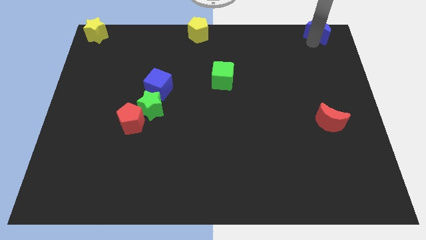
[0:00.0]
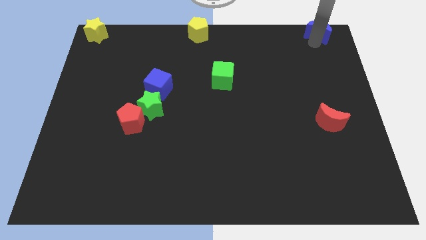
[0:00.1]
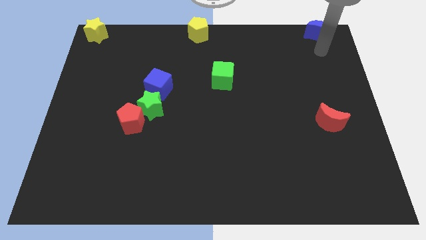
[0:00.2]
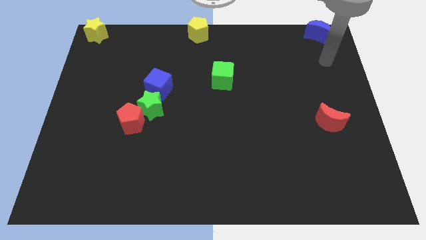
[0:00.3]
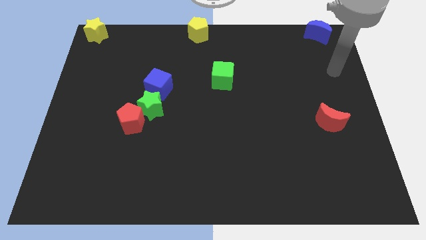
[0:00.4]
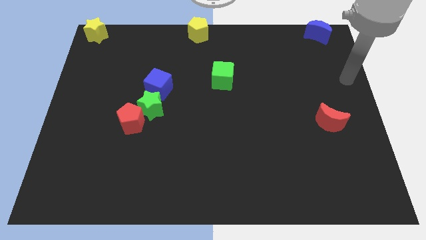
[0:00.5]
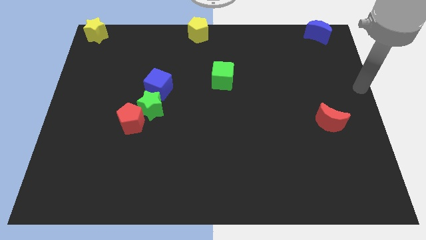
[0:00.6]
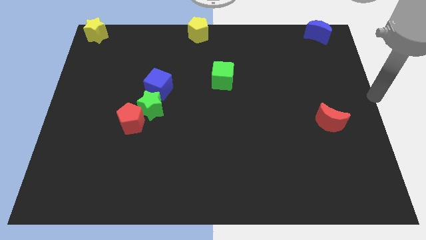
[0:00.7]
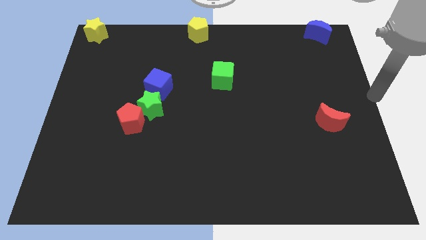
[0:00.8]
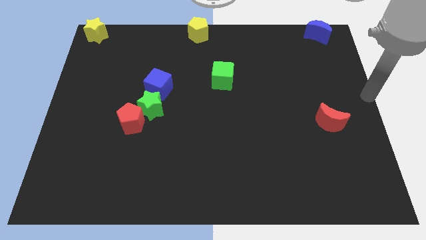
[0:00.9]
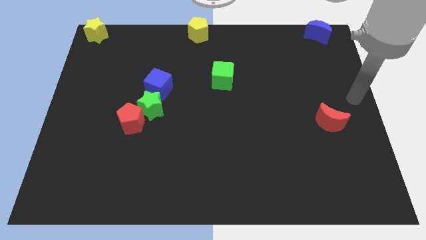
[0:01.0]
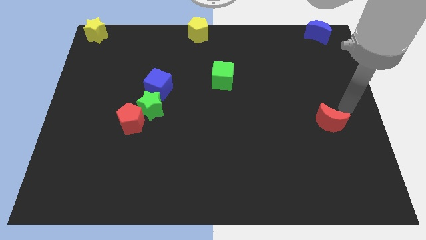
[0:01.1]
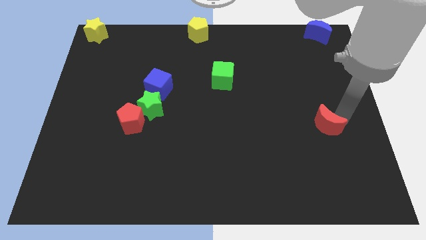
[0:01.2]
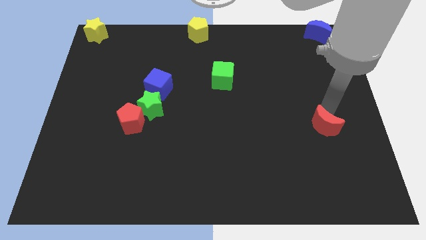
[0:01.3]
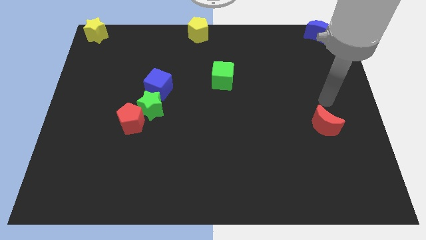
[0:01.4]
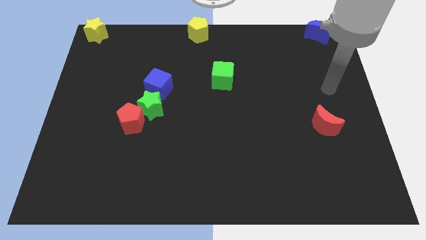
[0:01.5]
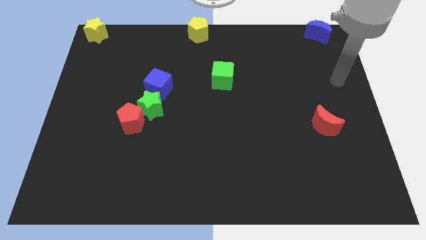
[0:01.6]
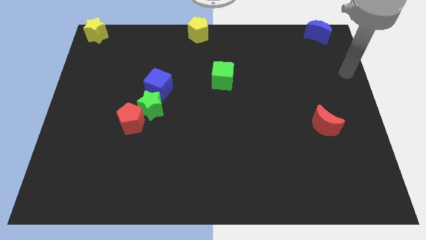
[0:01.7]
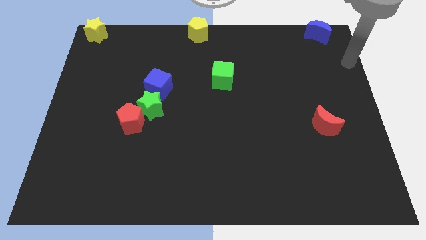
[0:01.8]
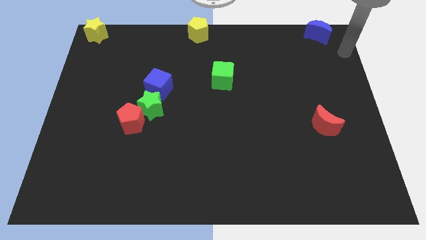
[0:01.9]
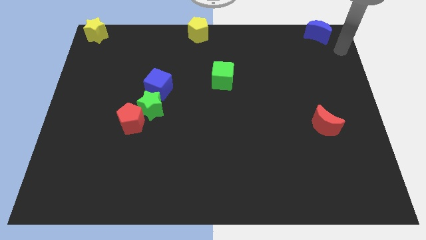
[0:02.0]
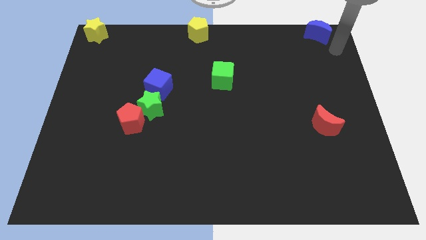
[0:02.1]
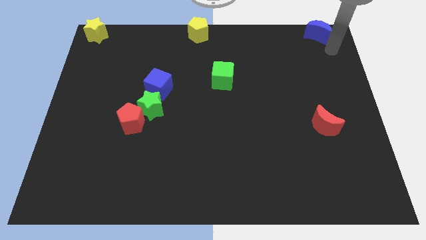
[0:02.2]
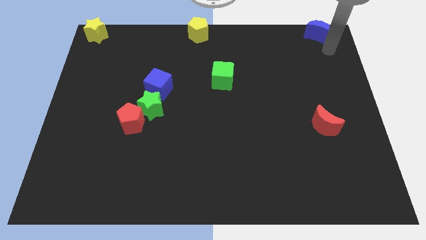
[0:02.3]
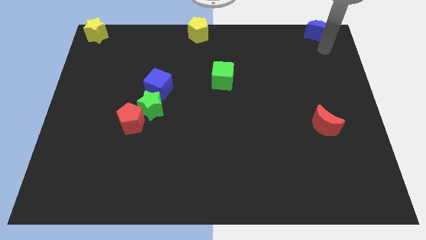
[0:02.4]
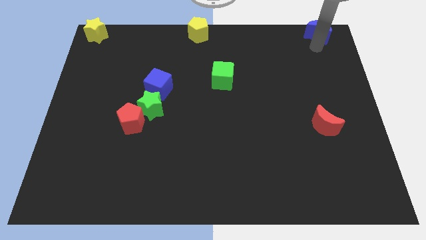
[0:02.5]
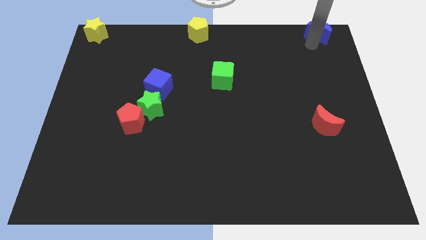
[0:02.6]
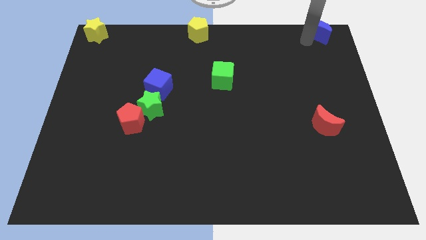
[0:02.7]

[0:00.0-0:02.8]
slightly push the red moon towards the bottom and move away

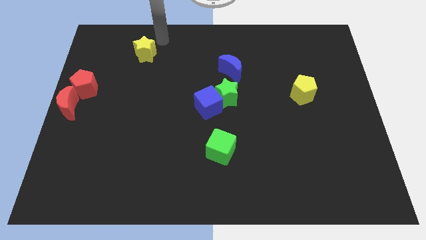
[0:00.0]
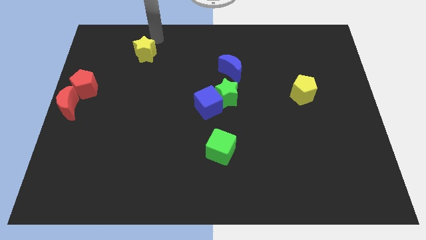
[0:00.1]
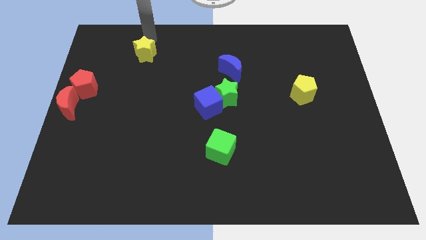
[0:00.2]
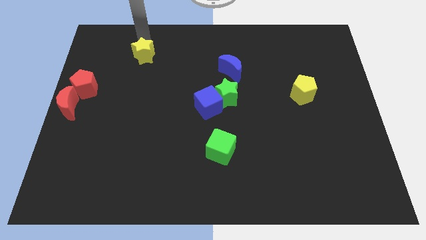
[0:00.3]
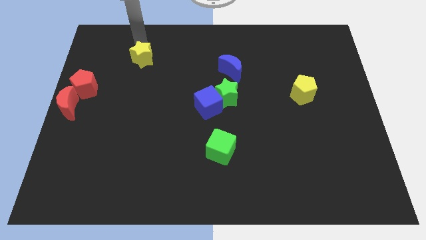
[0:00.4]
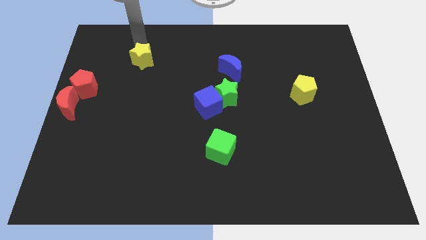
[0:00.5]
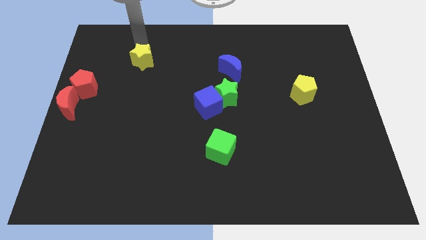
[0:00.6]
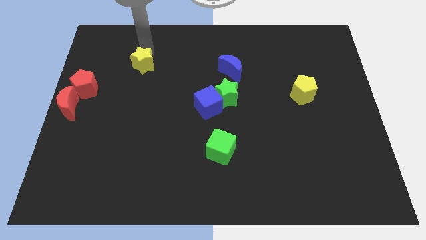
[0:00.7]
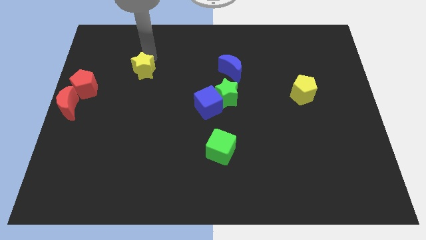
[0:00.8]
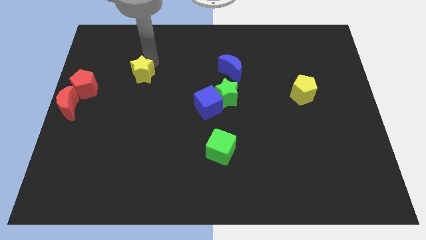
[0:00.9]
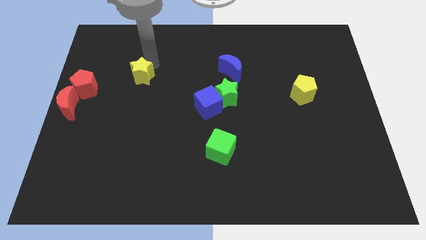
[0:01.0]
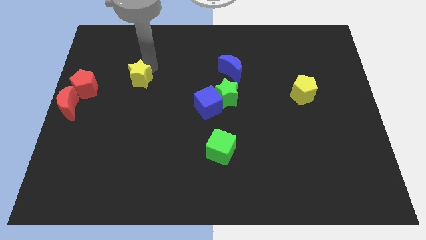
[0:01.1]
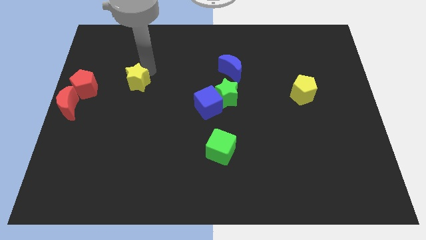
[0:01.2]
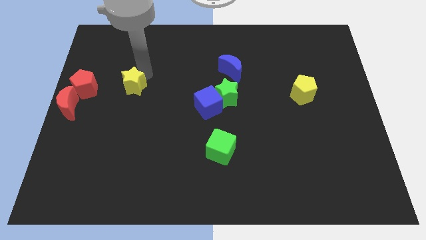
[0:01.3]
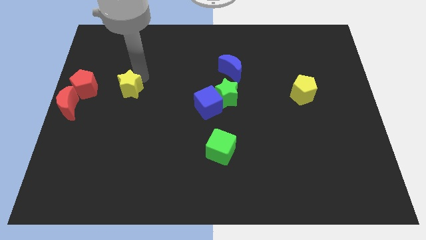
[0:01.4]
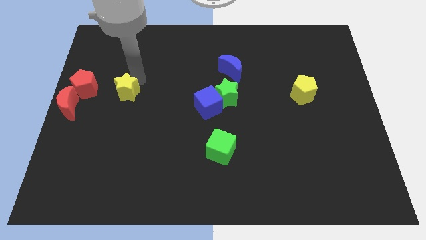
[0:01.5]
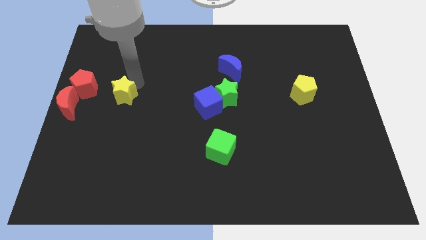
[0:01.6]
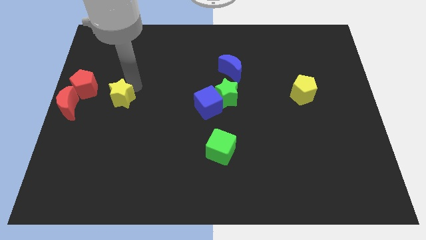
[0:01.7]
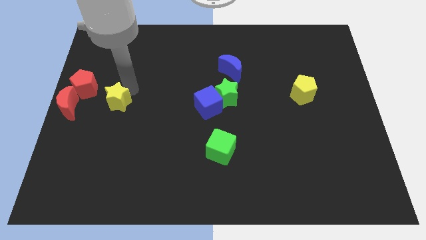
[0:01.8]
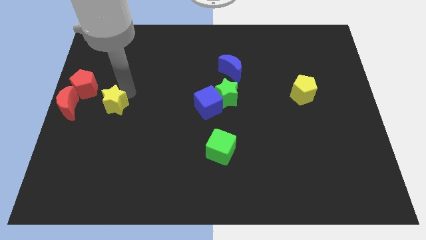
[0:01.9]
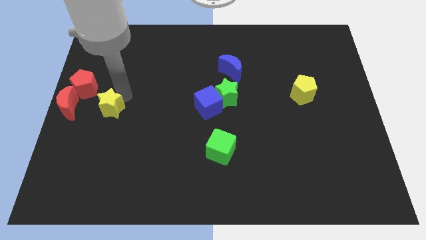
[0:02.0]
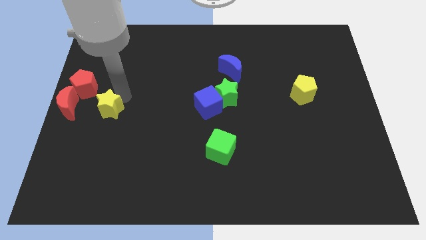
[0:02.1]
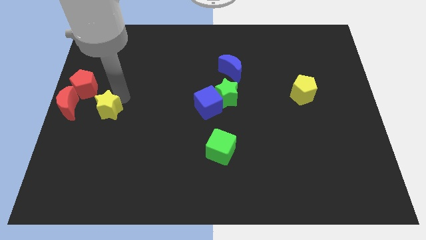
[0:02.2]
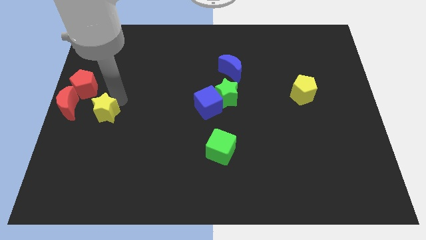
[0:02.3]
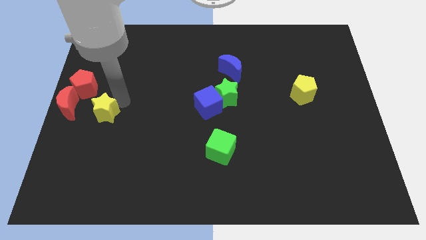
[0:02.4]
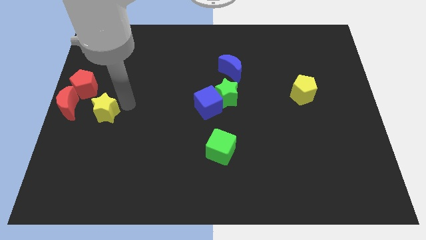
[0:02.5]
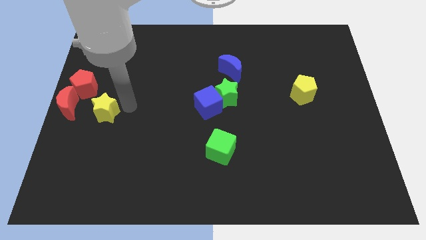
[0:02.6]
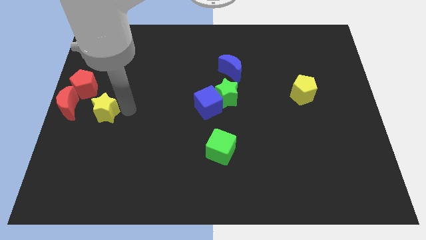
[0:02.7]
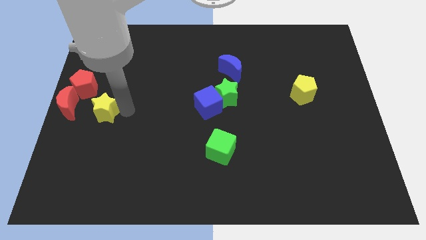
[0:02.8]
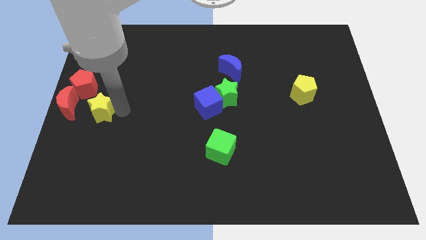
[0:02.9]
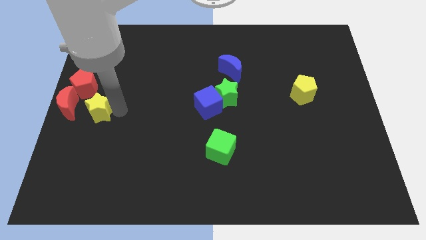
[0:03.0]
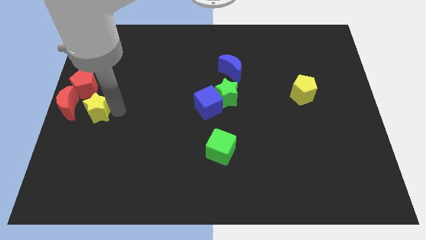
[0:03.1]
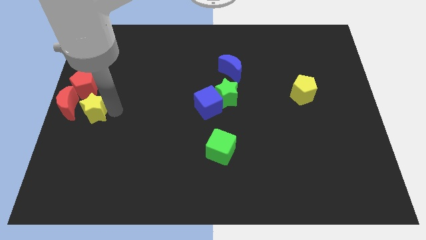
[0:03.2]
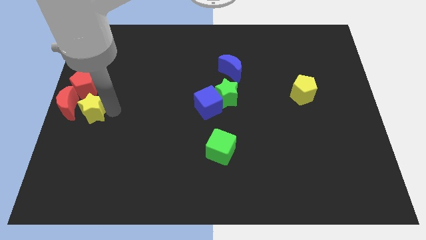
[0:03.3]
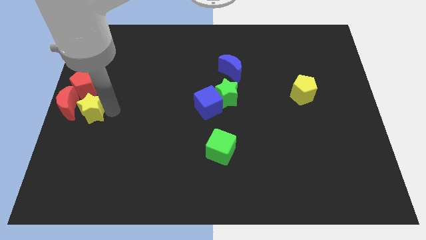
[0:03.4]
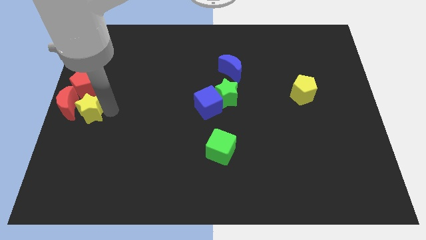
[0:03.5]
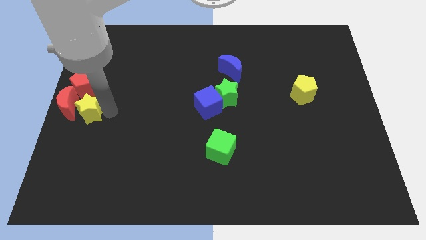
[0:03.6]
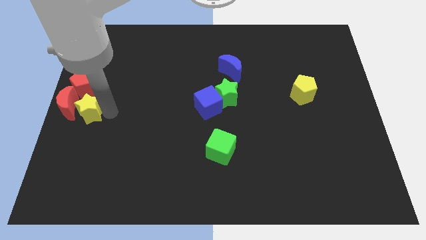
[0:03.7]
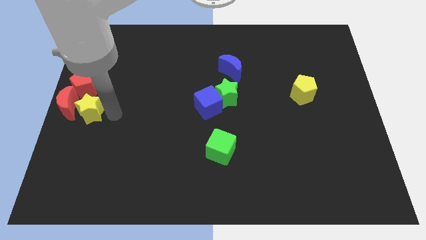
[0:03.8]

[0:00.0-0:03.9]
push the yellow star at the bottom of the red pentagon

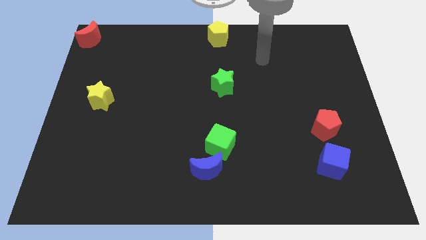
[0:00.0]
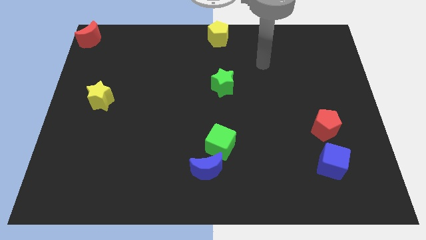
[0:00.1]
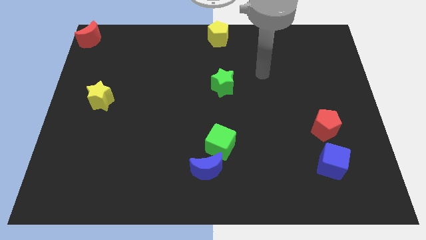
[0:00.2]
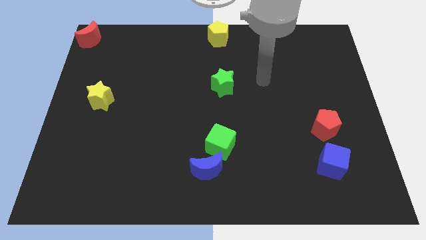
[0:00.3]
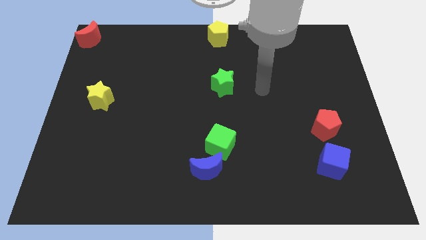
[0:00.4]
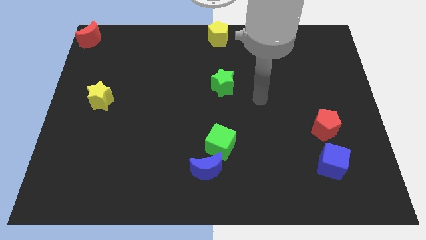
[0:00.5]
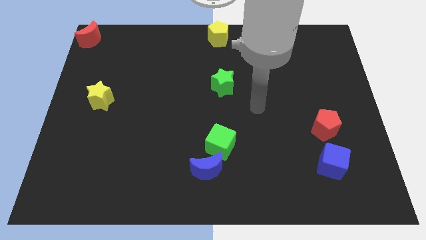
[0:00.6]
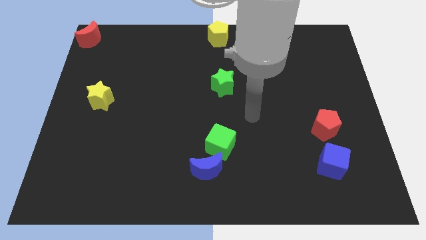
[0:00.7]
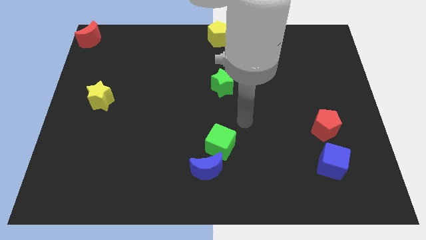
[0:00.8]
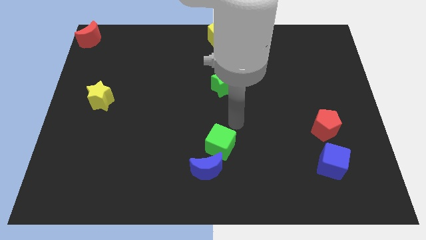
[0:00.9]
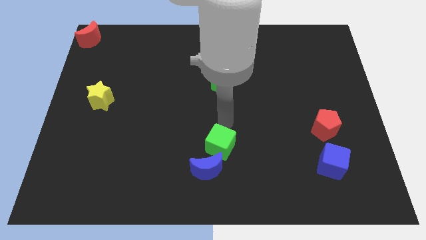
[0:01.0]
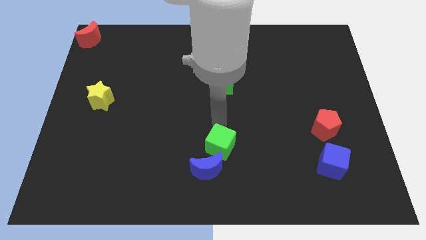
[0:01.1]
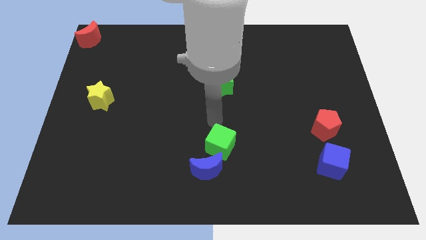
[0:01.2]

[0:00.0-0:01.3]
place your arm to the top of green cube

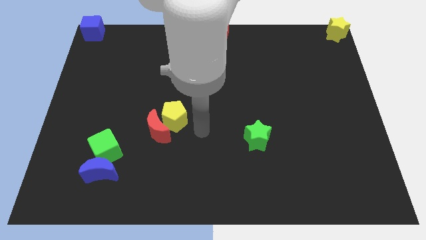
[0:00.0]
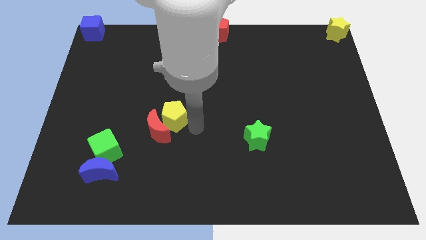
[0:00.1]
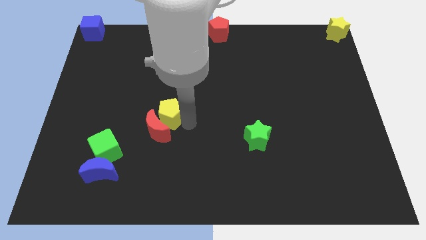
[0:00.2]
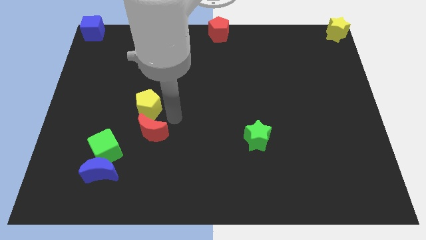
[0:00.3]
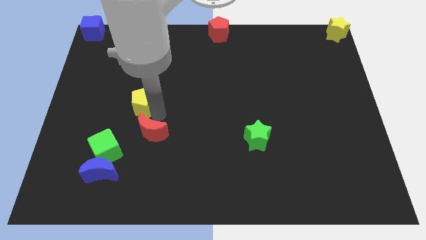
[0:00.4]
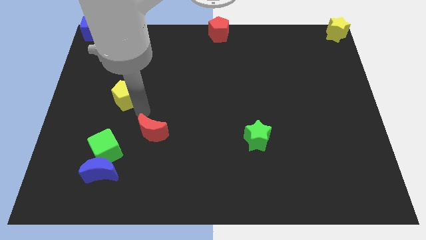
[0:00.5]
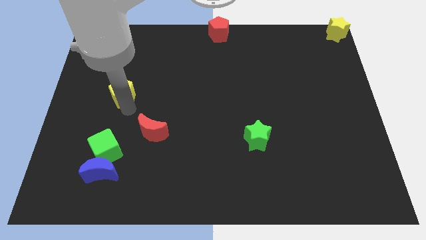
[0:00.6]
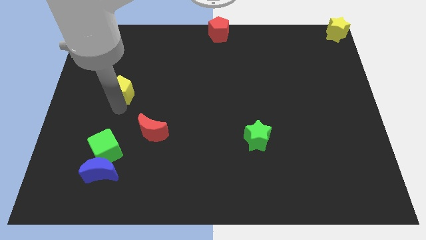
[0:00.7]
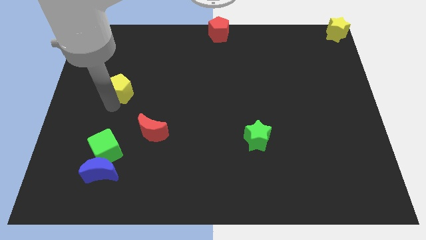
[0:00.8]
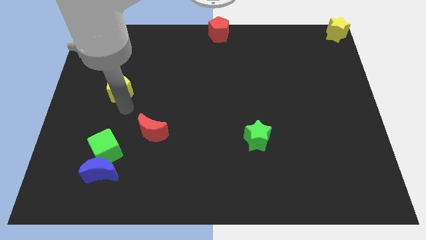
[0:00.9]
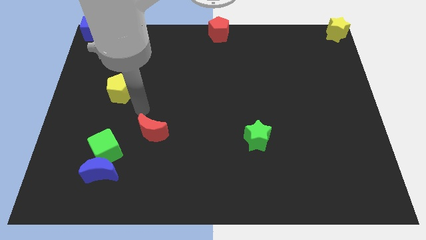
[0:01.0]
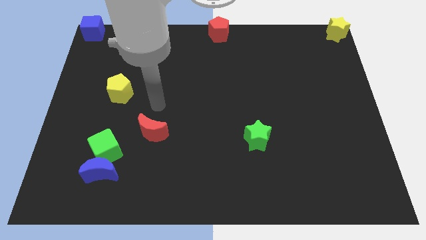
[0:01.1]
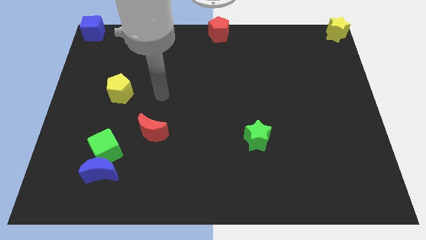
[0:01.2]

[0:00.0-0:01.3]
move the yellow pentagon away from the red crescent
